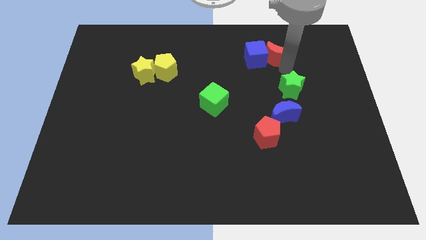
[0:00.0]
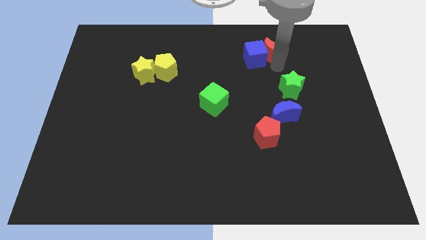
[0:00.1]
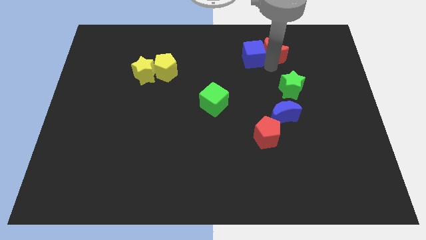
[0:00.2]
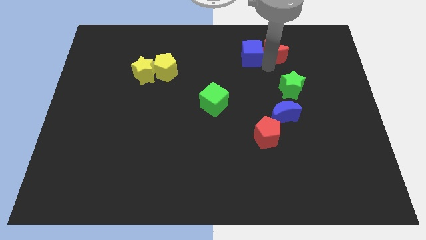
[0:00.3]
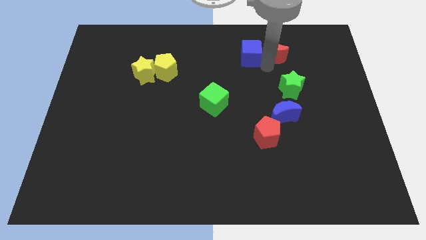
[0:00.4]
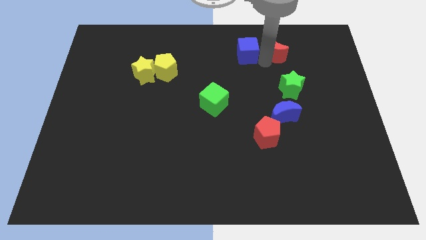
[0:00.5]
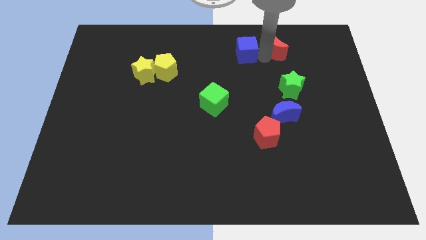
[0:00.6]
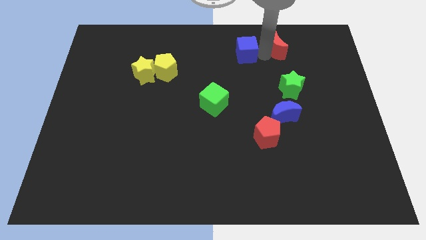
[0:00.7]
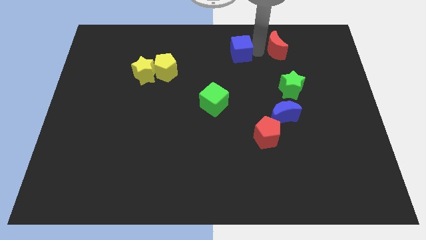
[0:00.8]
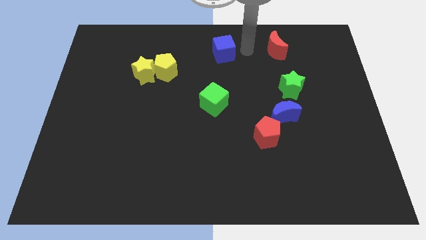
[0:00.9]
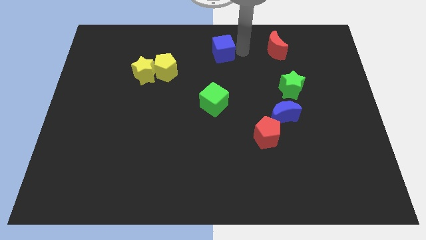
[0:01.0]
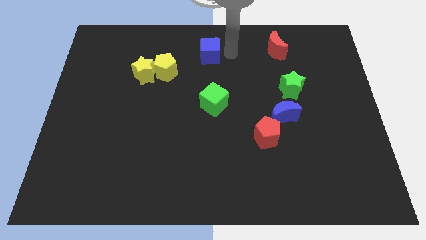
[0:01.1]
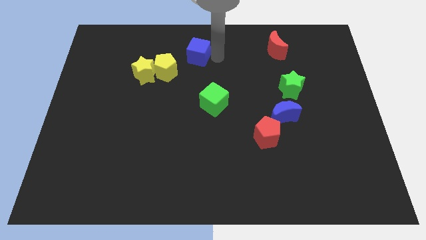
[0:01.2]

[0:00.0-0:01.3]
separate the red crescent and the blue cube

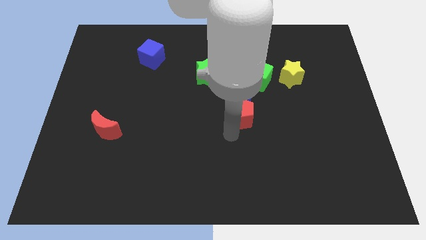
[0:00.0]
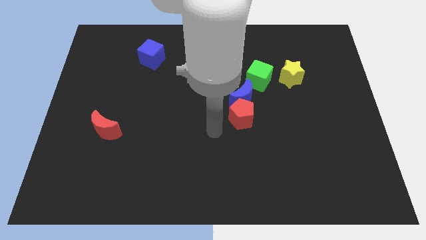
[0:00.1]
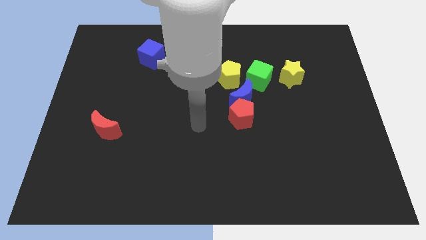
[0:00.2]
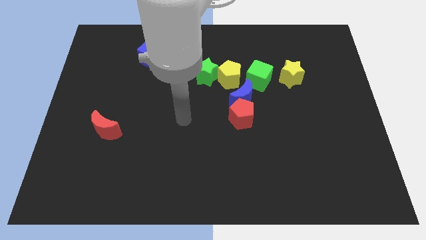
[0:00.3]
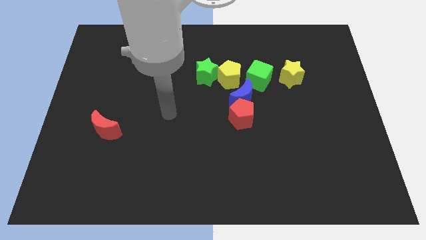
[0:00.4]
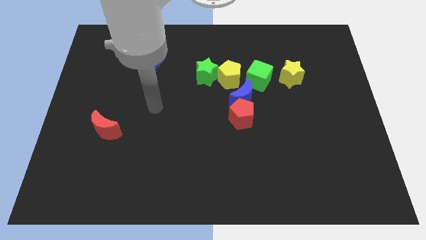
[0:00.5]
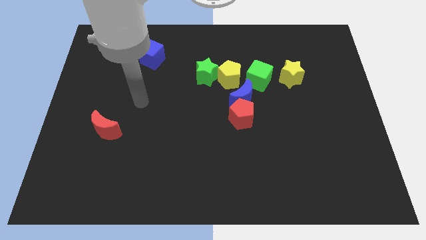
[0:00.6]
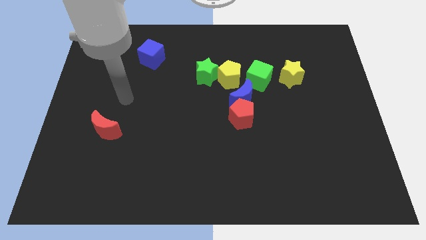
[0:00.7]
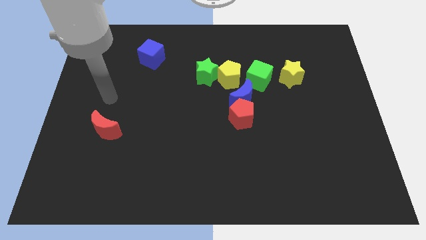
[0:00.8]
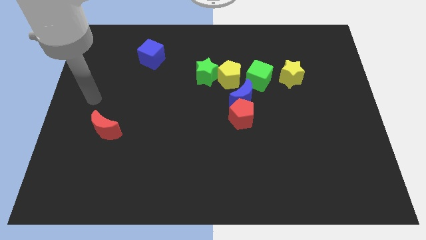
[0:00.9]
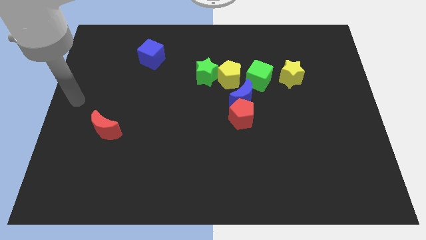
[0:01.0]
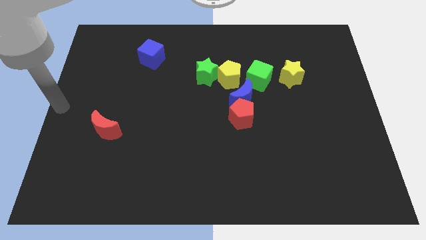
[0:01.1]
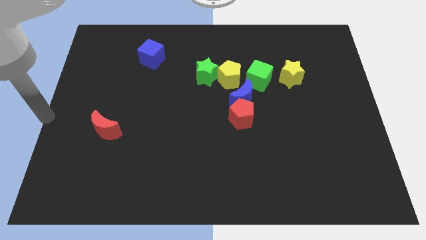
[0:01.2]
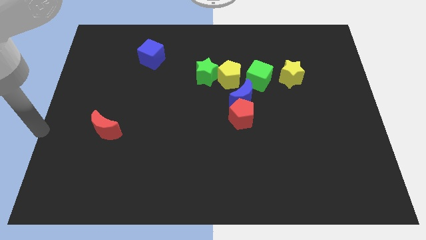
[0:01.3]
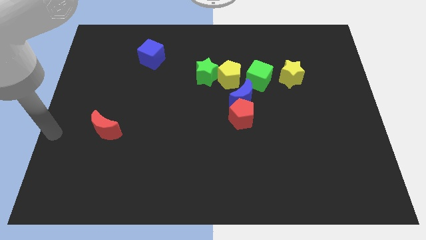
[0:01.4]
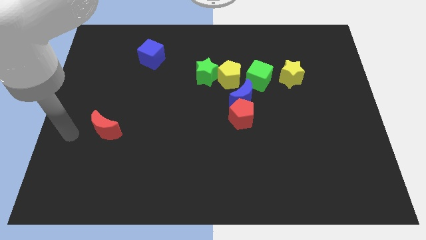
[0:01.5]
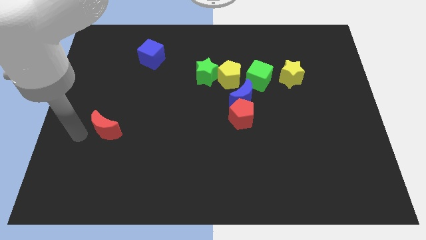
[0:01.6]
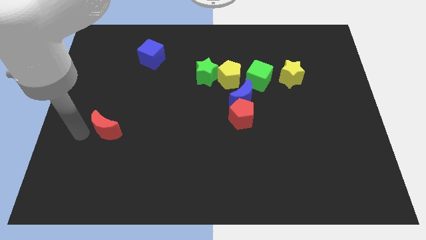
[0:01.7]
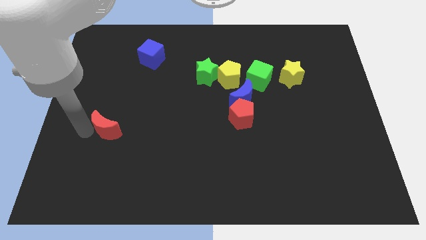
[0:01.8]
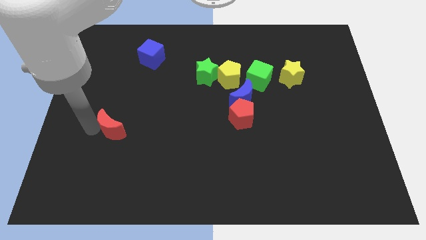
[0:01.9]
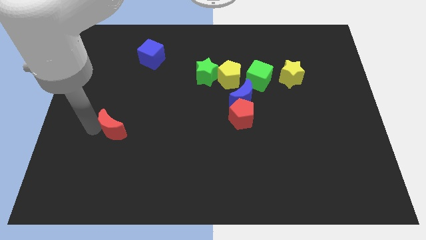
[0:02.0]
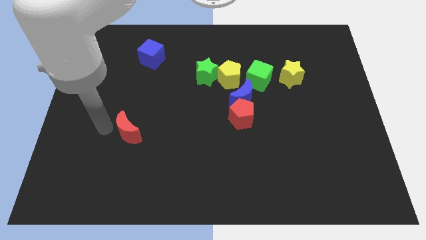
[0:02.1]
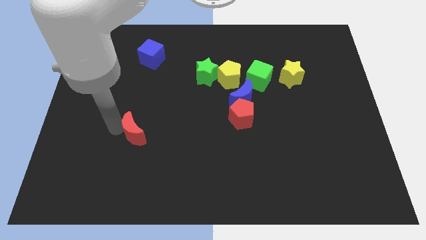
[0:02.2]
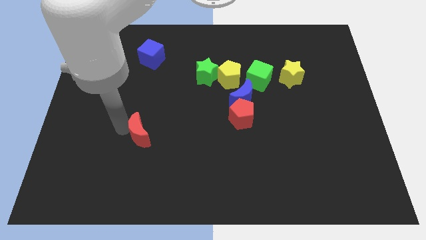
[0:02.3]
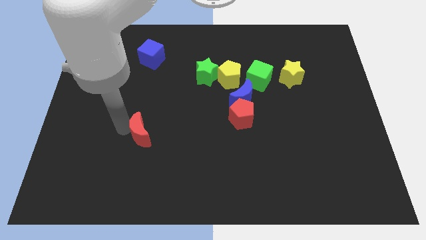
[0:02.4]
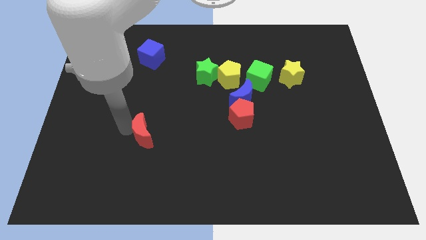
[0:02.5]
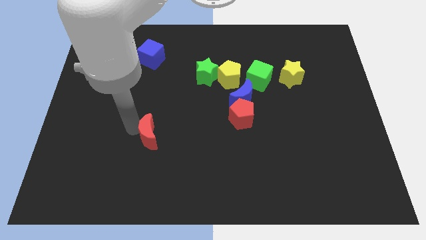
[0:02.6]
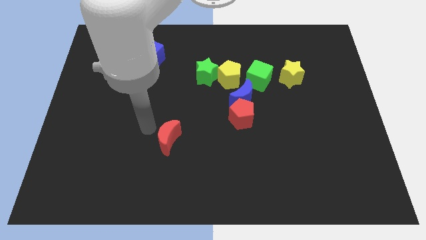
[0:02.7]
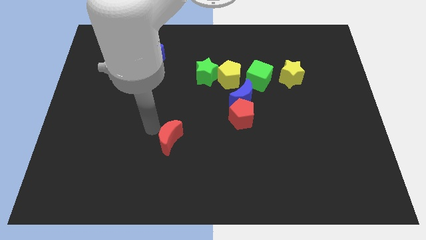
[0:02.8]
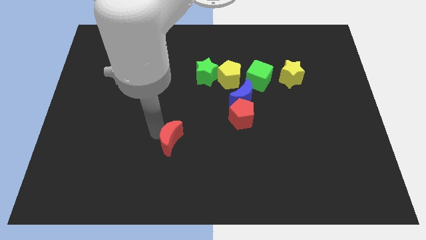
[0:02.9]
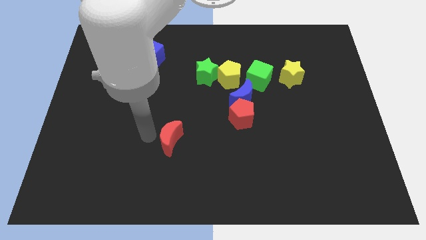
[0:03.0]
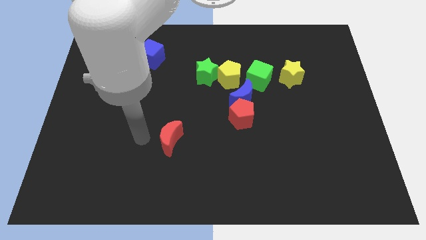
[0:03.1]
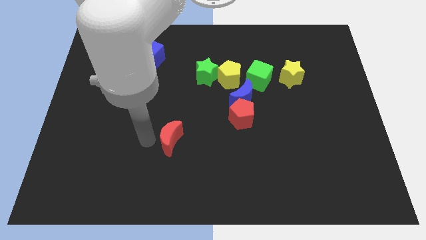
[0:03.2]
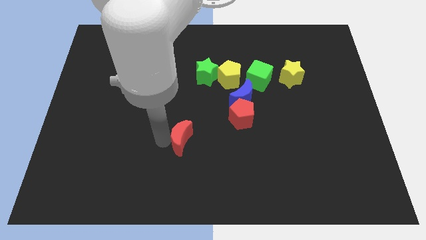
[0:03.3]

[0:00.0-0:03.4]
place the red moon diagonally to blue moon

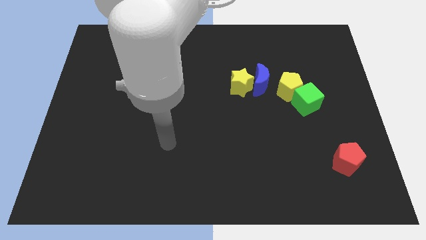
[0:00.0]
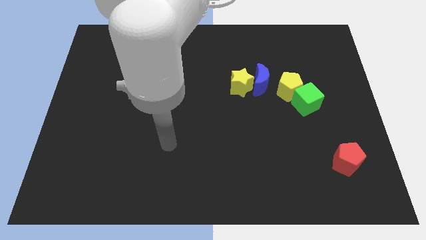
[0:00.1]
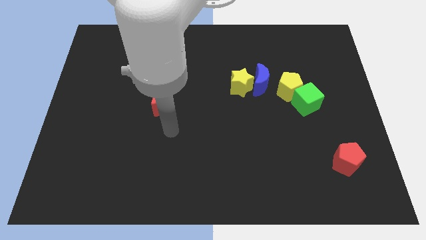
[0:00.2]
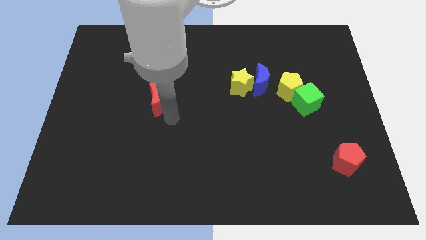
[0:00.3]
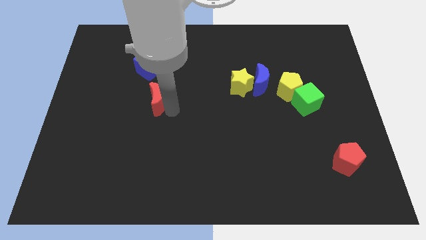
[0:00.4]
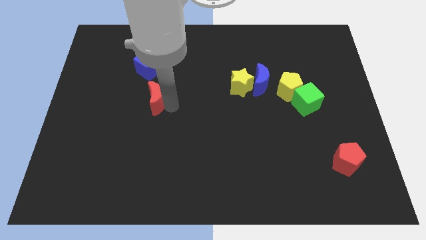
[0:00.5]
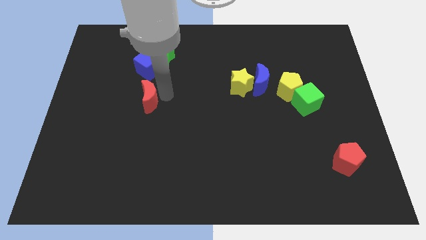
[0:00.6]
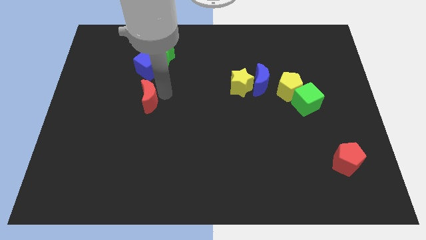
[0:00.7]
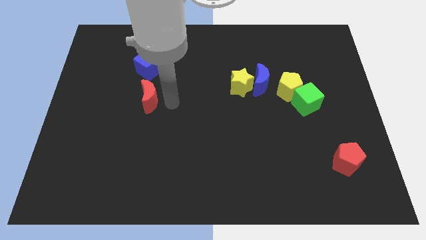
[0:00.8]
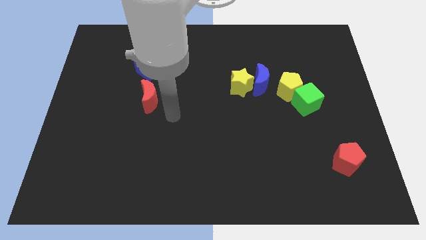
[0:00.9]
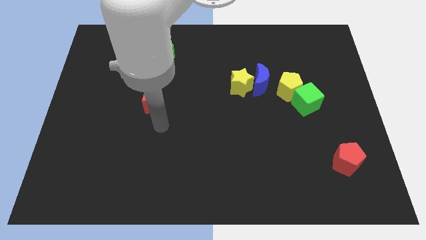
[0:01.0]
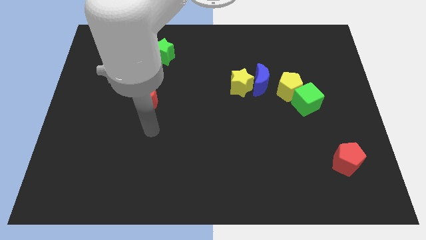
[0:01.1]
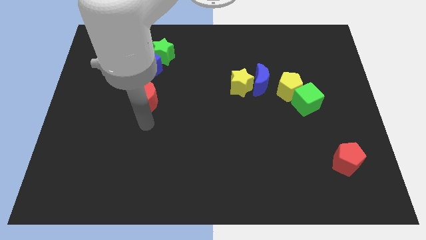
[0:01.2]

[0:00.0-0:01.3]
point your arm at the bottom side of the red moon

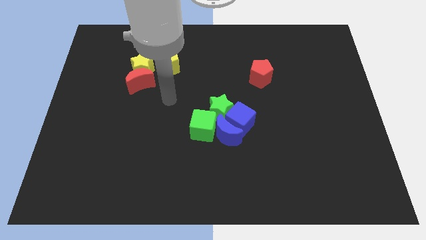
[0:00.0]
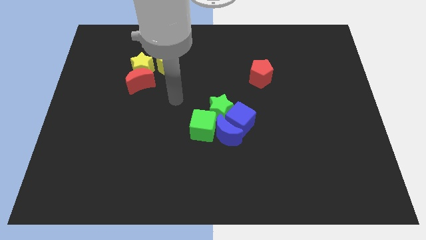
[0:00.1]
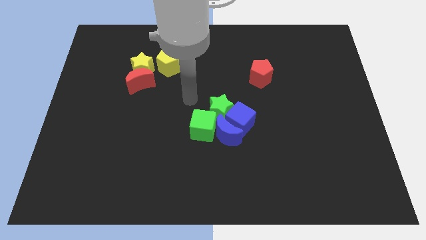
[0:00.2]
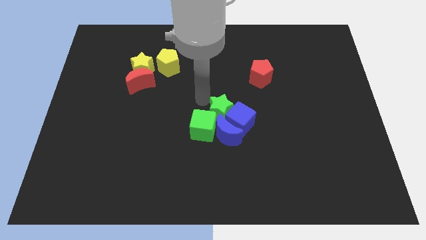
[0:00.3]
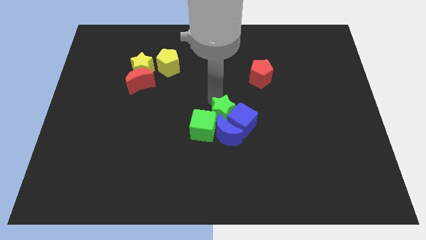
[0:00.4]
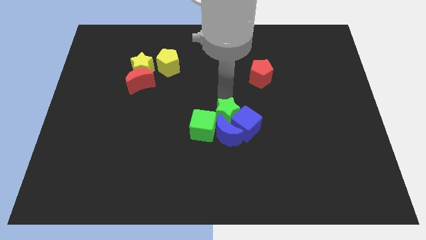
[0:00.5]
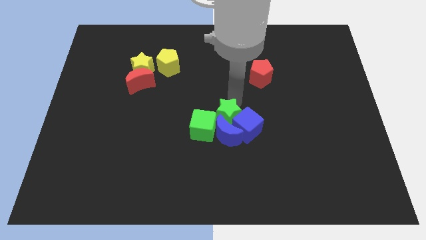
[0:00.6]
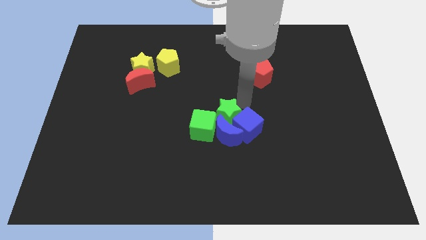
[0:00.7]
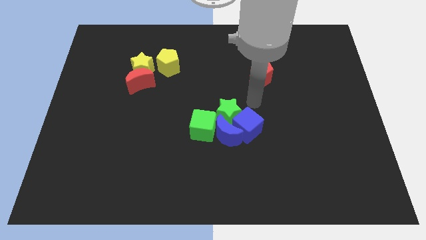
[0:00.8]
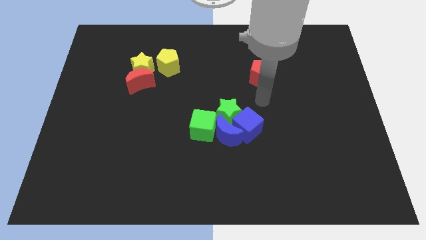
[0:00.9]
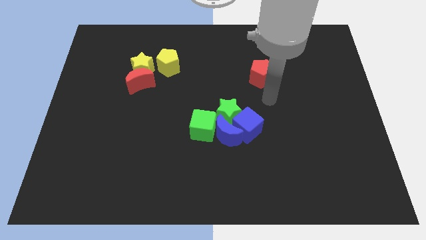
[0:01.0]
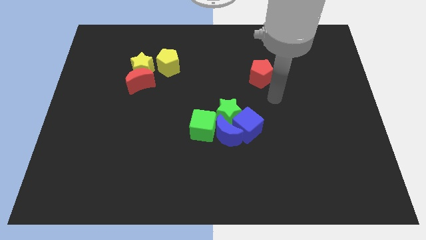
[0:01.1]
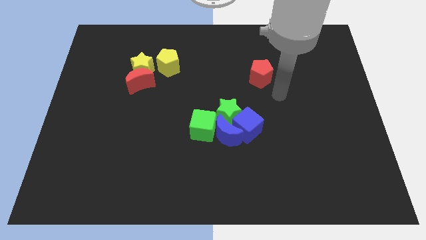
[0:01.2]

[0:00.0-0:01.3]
slightly move the green star to the down

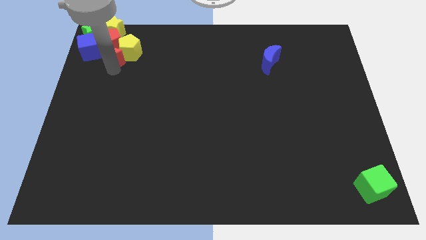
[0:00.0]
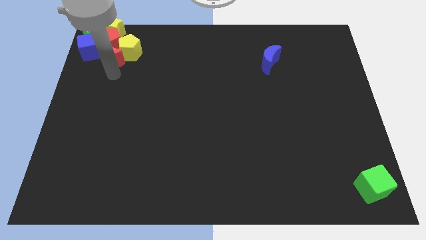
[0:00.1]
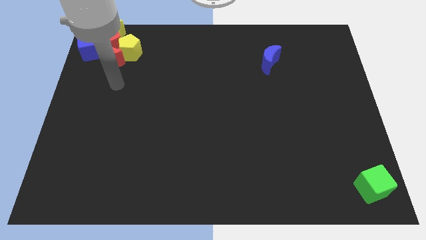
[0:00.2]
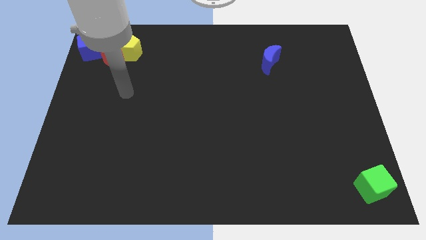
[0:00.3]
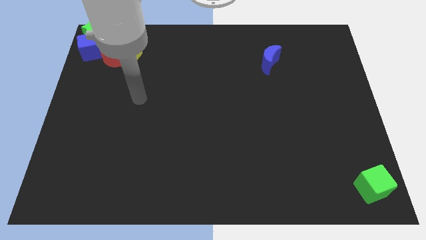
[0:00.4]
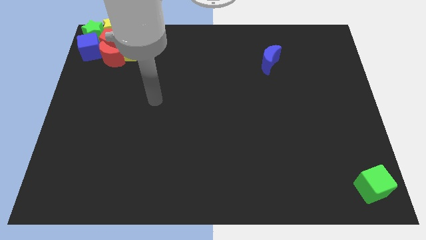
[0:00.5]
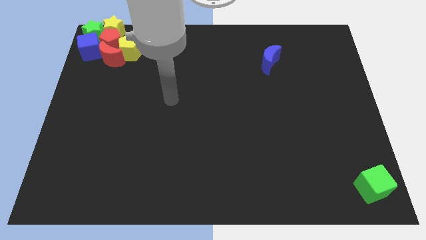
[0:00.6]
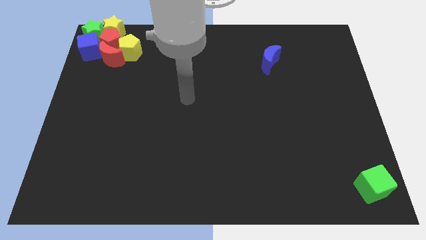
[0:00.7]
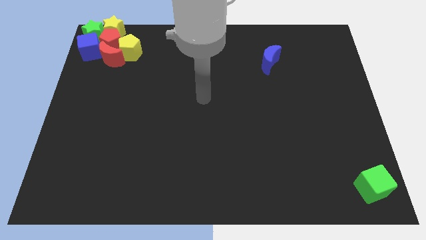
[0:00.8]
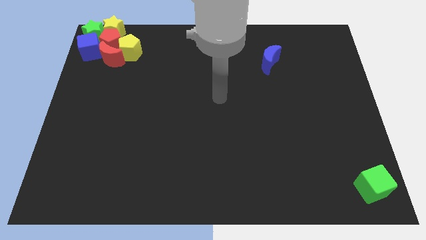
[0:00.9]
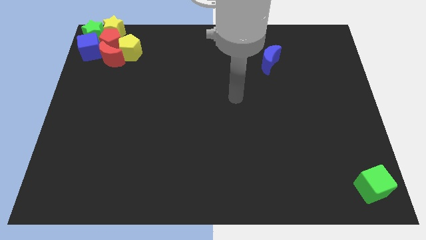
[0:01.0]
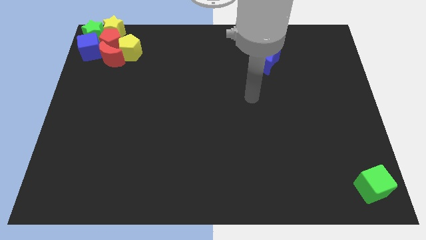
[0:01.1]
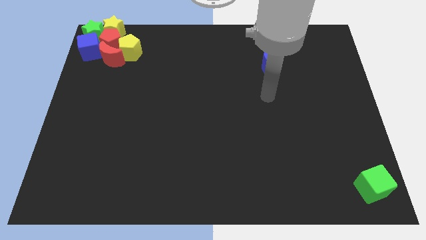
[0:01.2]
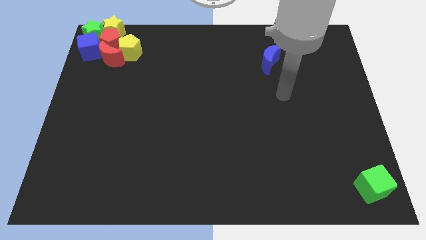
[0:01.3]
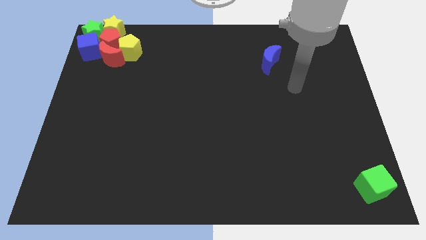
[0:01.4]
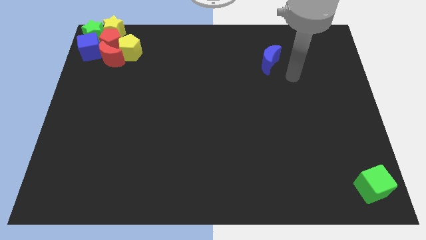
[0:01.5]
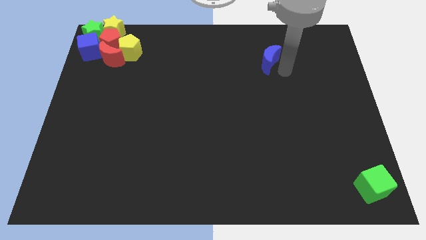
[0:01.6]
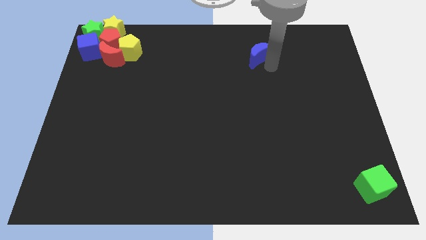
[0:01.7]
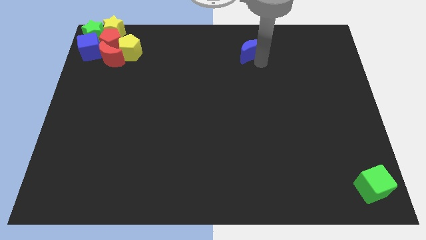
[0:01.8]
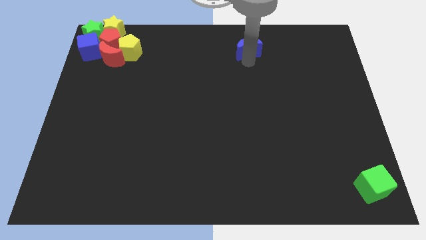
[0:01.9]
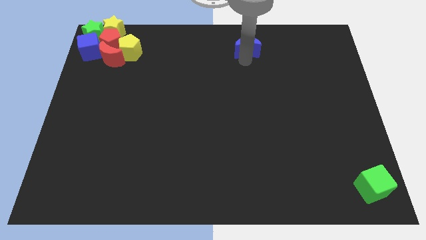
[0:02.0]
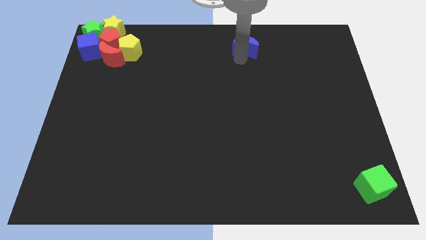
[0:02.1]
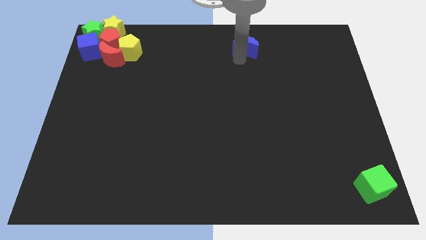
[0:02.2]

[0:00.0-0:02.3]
move the blue moon slightly to the left
